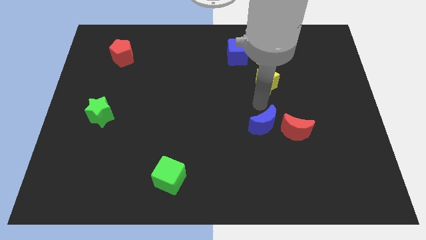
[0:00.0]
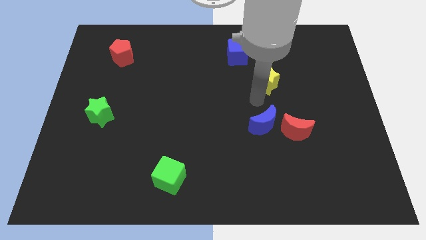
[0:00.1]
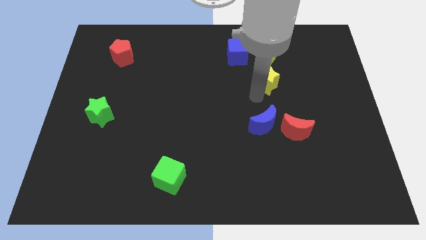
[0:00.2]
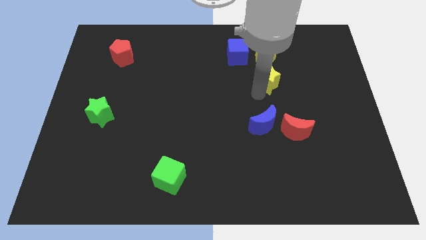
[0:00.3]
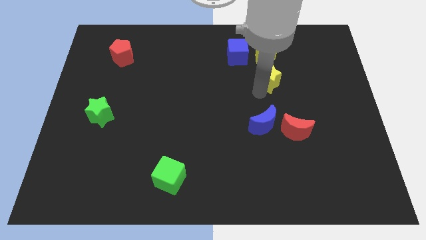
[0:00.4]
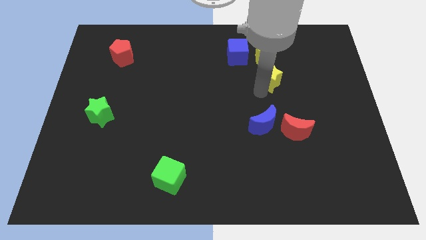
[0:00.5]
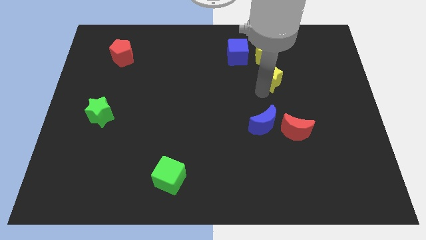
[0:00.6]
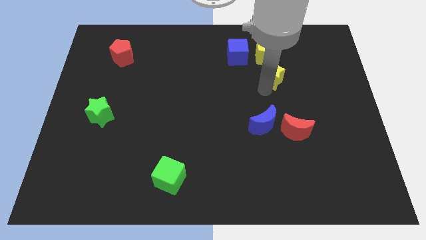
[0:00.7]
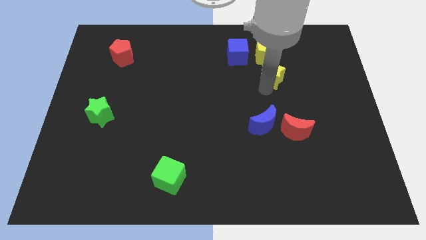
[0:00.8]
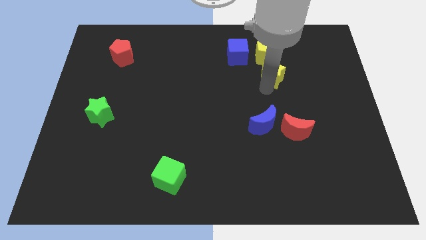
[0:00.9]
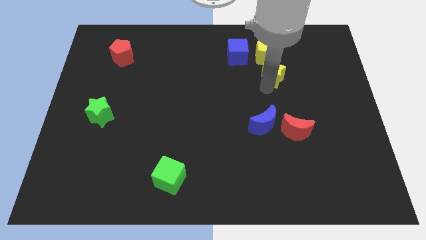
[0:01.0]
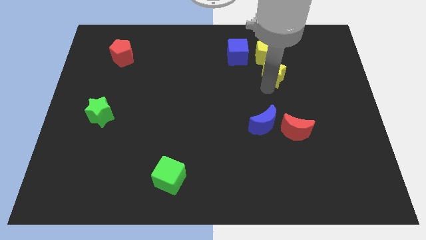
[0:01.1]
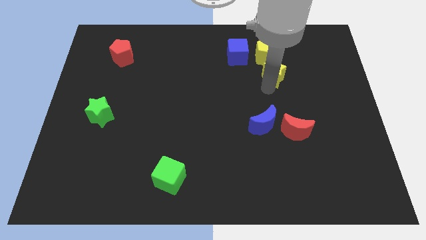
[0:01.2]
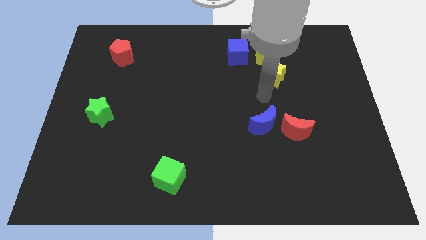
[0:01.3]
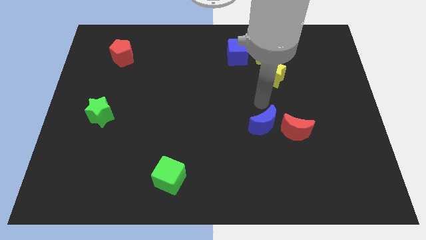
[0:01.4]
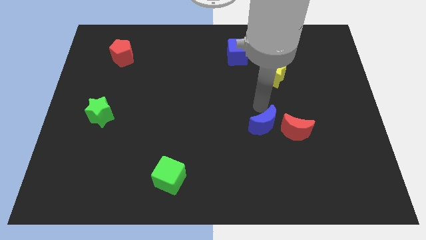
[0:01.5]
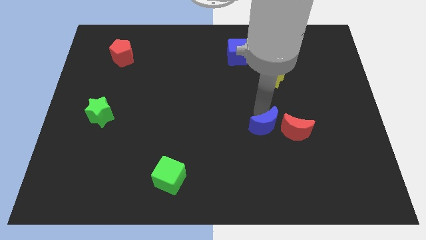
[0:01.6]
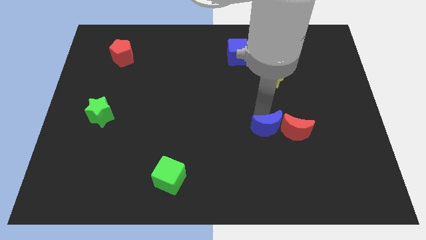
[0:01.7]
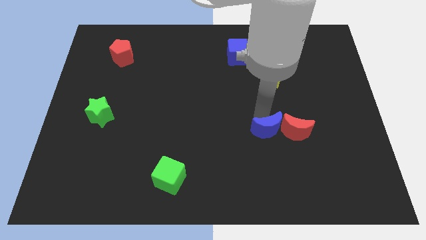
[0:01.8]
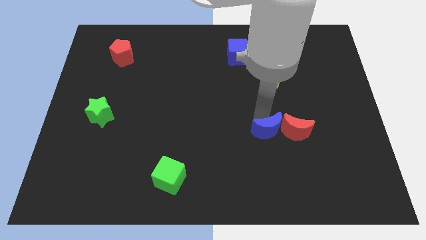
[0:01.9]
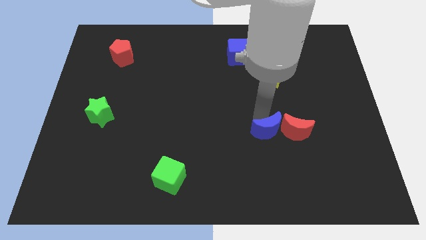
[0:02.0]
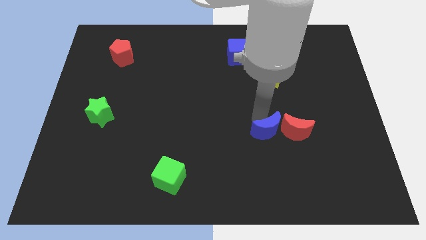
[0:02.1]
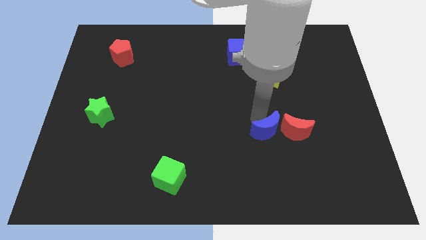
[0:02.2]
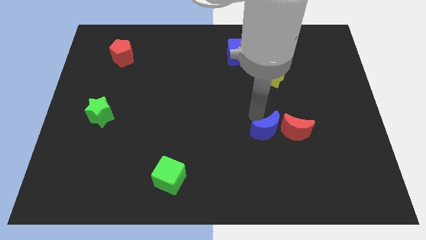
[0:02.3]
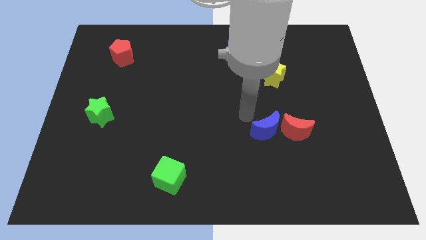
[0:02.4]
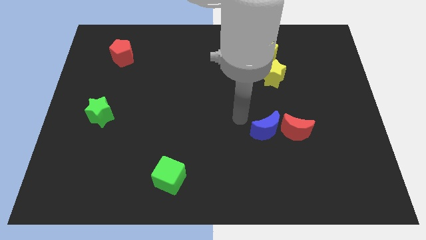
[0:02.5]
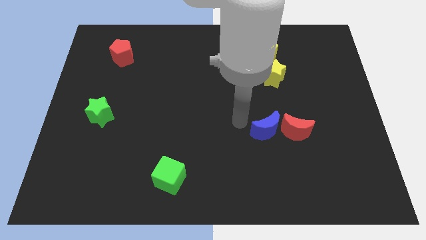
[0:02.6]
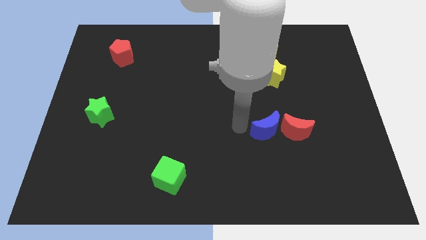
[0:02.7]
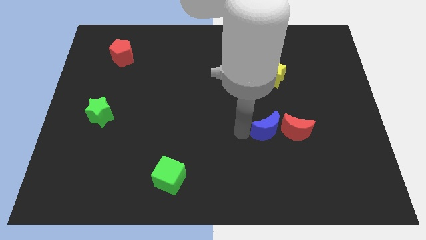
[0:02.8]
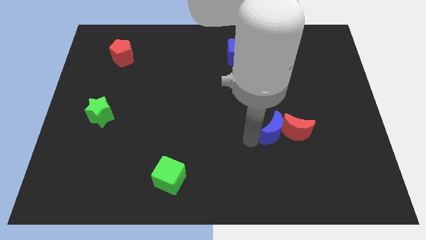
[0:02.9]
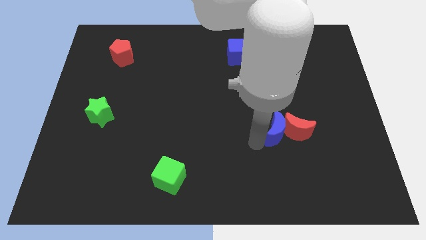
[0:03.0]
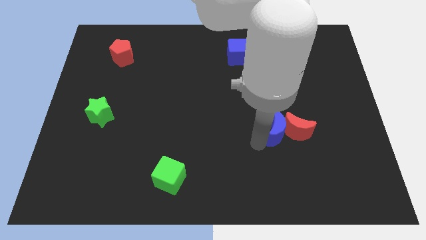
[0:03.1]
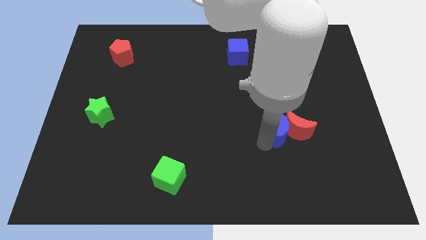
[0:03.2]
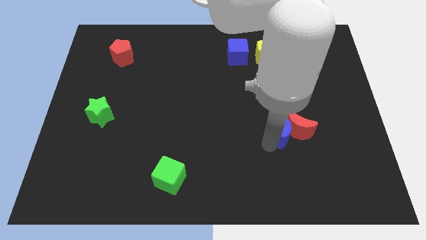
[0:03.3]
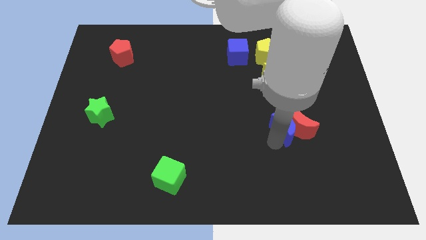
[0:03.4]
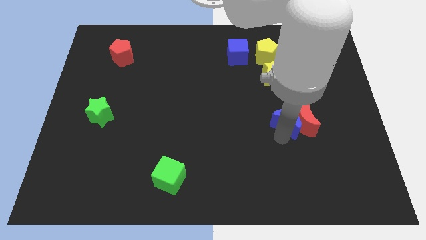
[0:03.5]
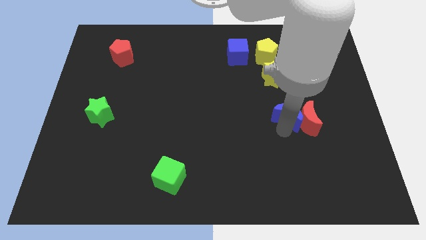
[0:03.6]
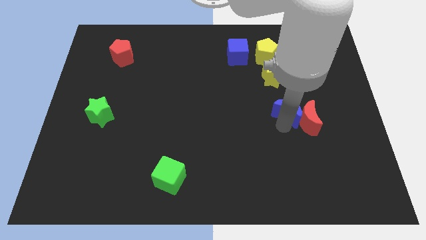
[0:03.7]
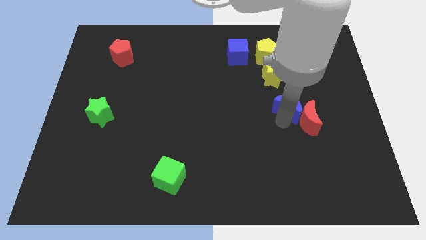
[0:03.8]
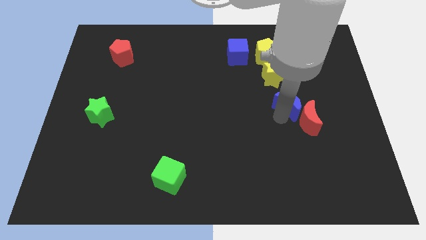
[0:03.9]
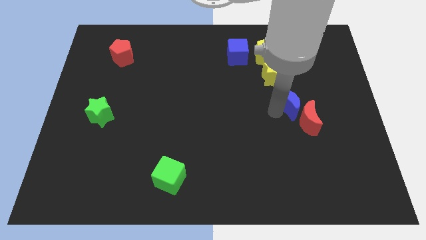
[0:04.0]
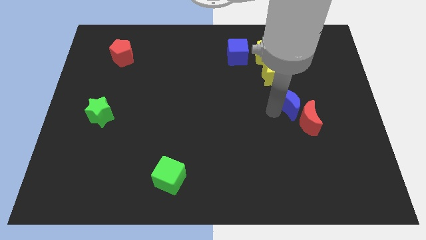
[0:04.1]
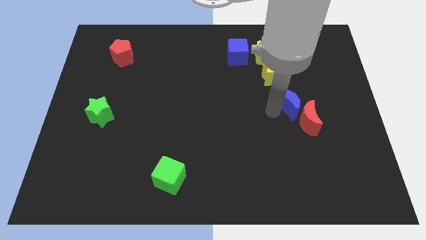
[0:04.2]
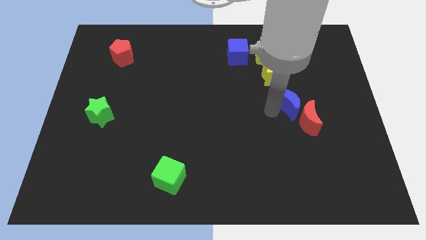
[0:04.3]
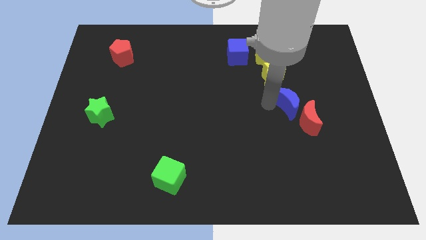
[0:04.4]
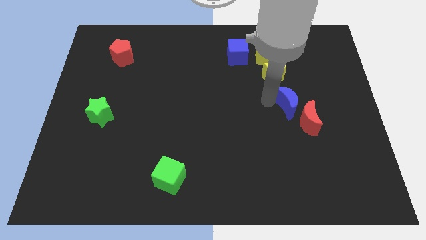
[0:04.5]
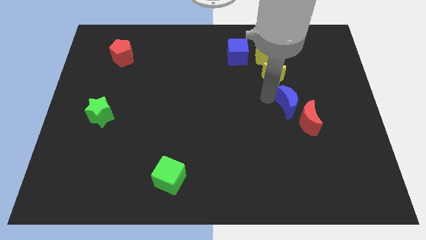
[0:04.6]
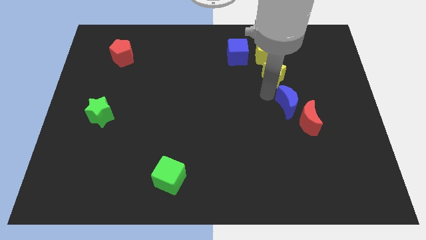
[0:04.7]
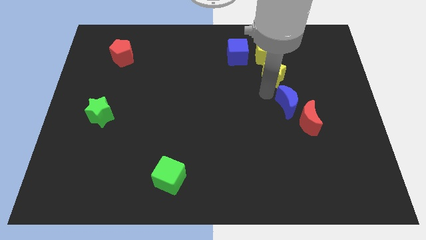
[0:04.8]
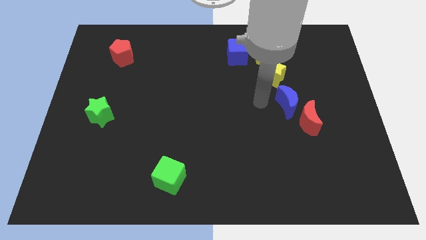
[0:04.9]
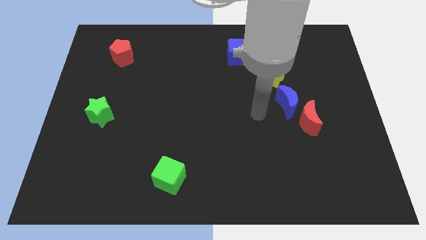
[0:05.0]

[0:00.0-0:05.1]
drag the blue moon diagonally to the top left of the red moon

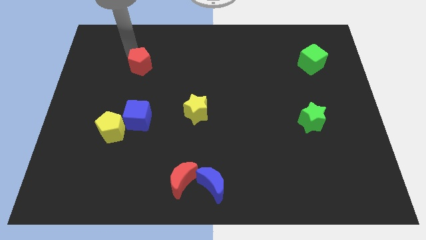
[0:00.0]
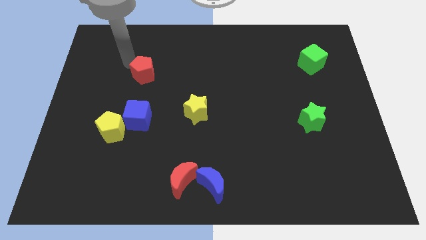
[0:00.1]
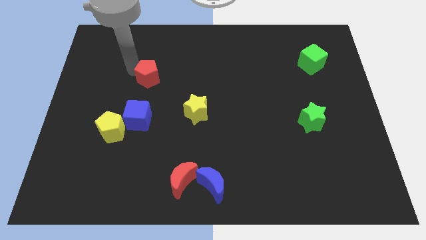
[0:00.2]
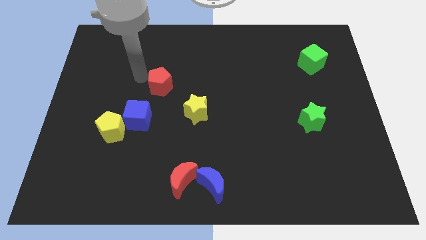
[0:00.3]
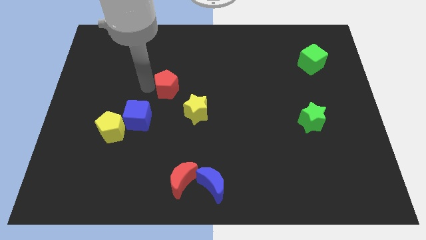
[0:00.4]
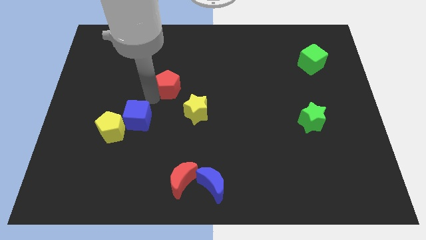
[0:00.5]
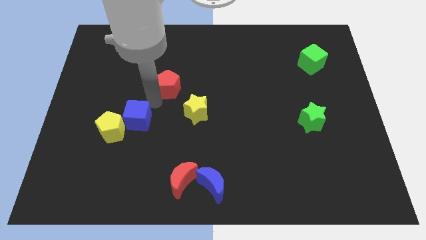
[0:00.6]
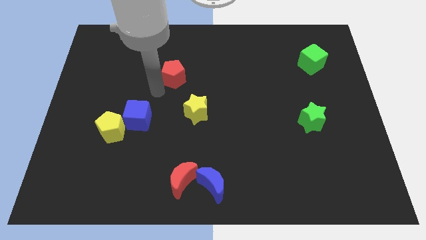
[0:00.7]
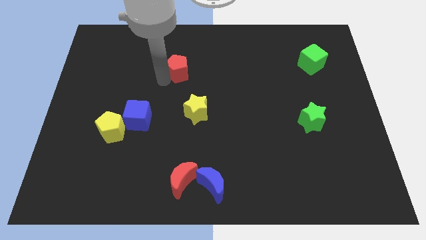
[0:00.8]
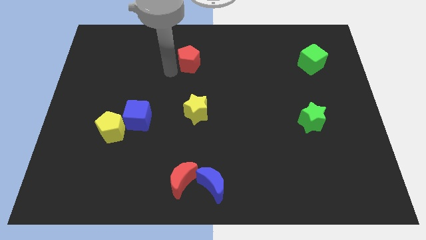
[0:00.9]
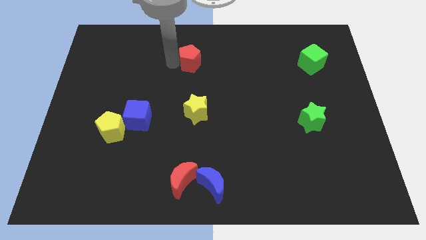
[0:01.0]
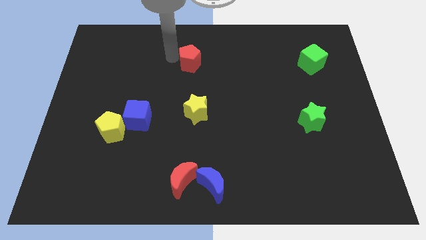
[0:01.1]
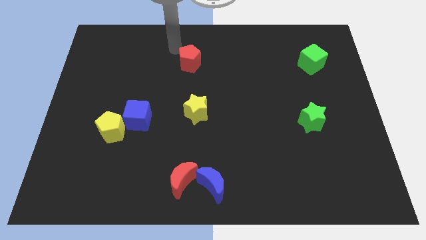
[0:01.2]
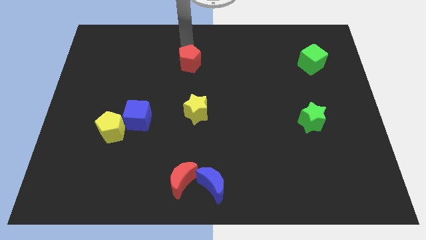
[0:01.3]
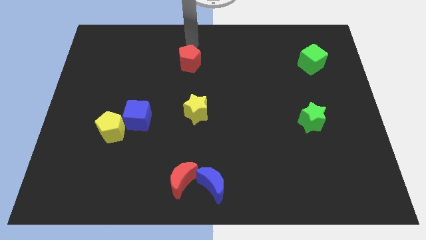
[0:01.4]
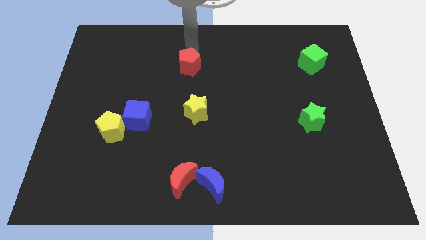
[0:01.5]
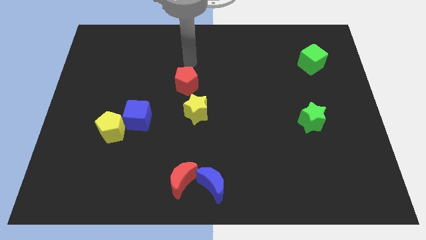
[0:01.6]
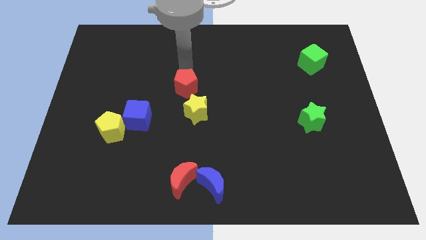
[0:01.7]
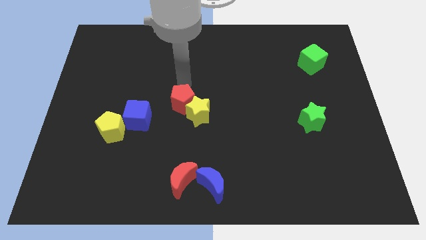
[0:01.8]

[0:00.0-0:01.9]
place the red pentagon above the yellow star

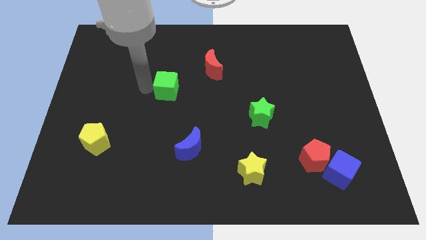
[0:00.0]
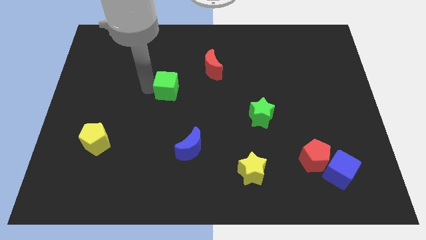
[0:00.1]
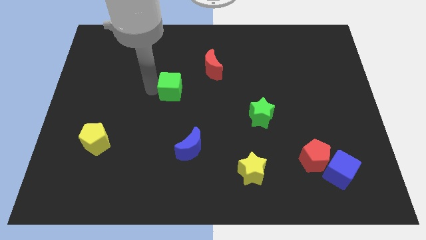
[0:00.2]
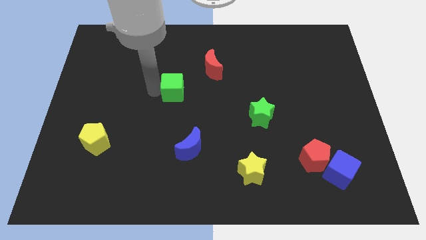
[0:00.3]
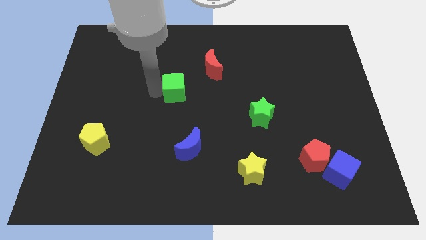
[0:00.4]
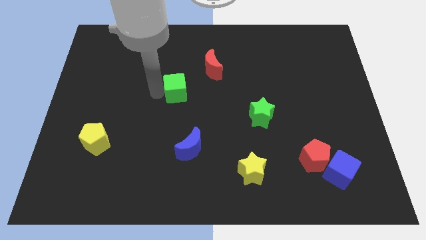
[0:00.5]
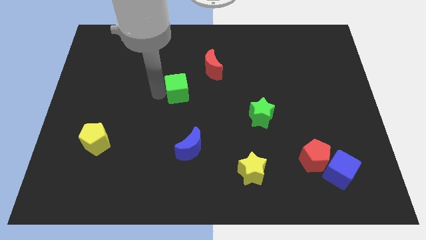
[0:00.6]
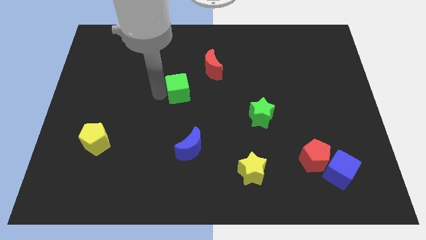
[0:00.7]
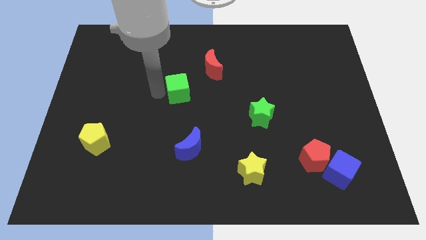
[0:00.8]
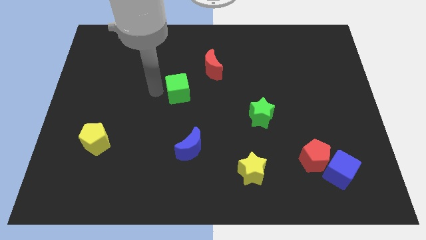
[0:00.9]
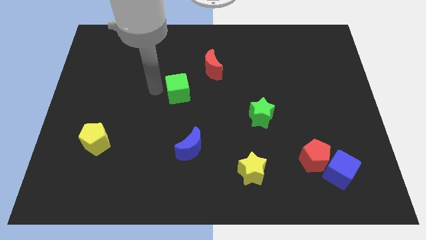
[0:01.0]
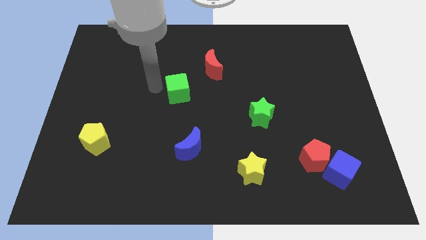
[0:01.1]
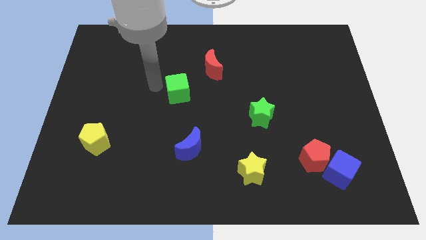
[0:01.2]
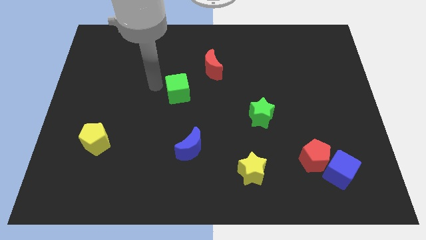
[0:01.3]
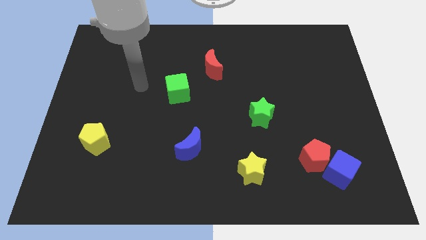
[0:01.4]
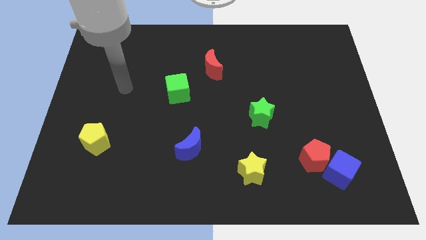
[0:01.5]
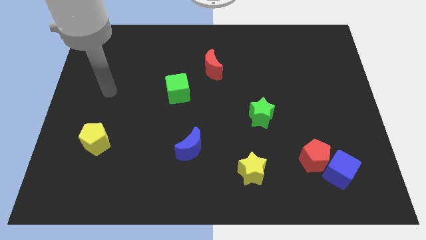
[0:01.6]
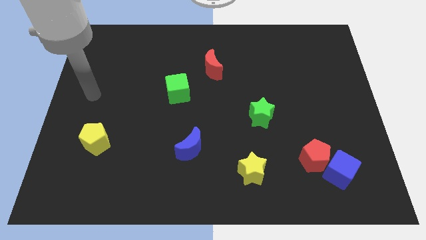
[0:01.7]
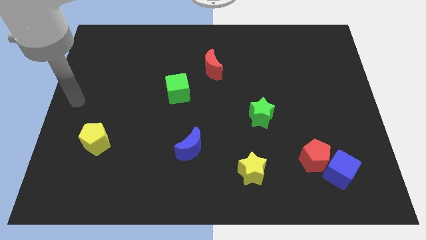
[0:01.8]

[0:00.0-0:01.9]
move the green cube slightly to the right

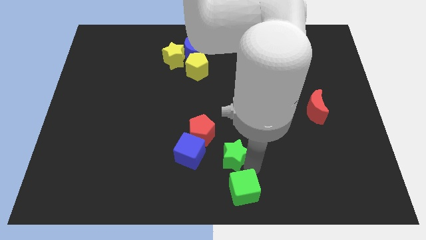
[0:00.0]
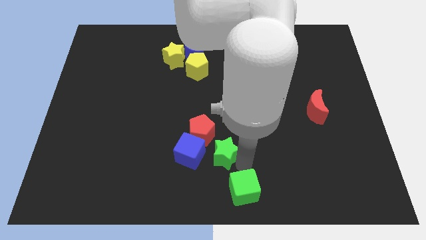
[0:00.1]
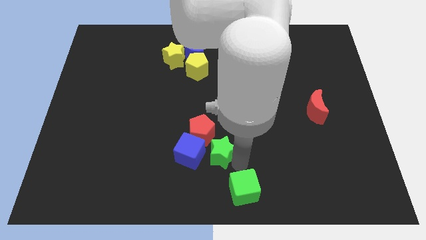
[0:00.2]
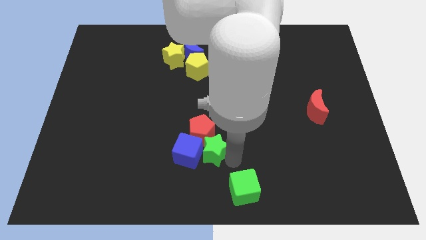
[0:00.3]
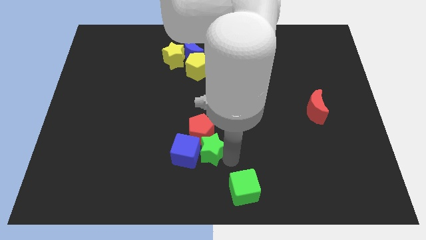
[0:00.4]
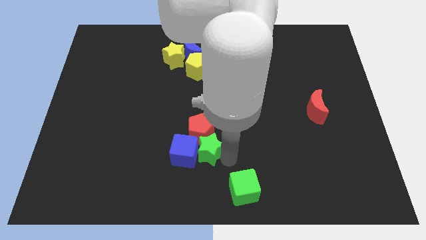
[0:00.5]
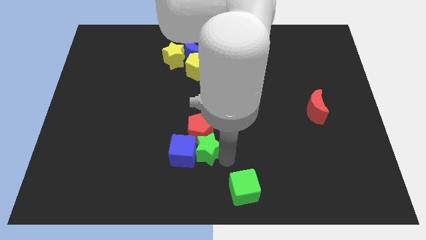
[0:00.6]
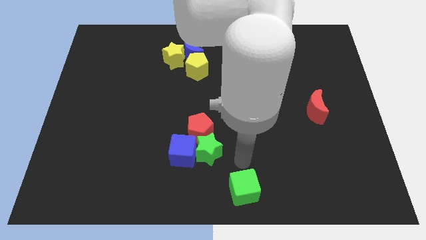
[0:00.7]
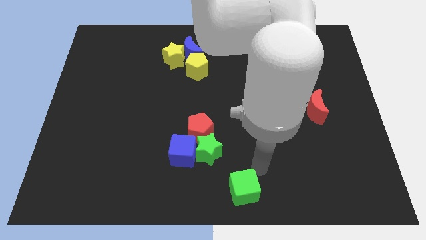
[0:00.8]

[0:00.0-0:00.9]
move green star in to blue cube
